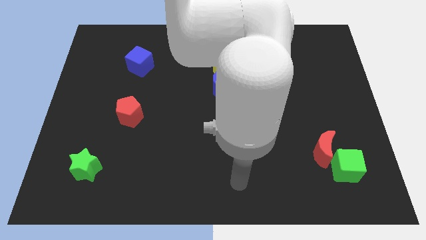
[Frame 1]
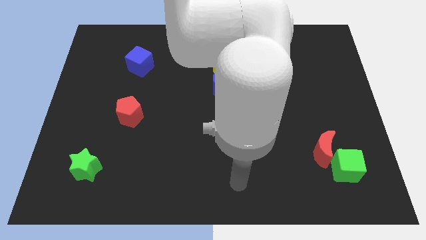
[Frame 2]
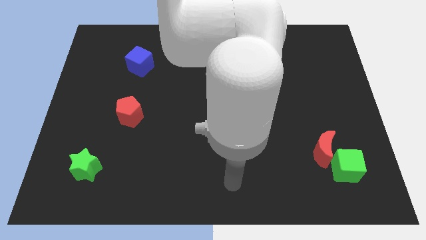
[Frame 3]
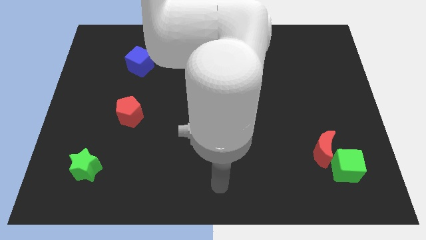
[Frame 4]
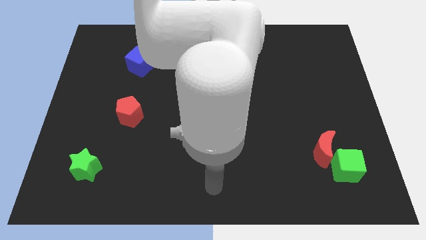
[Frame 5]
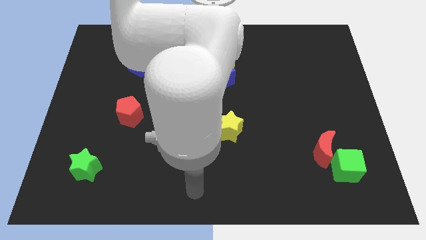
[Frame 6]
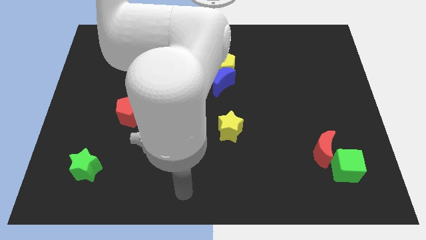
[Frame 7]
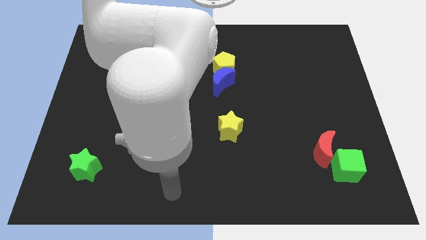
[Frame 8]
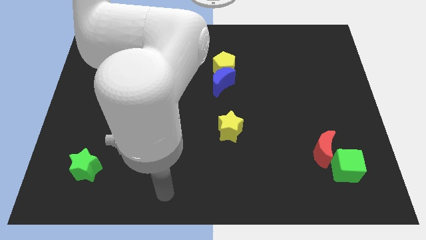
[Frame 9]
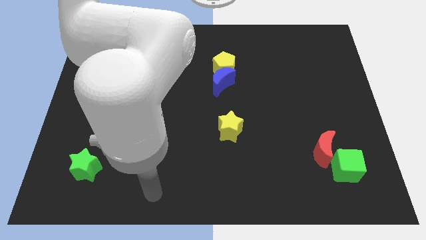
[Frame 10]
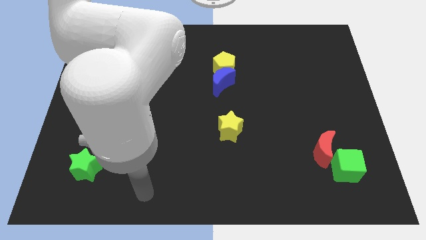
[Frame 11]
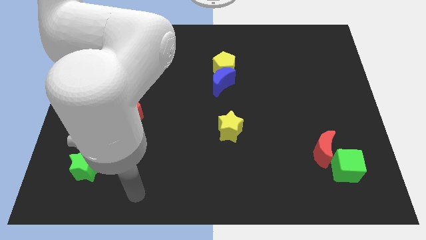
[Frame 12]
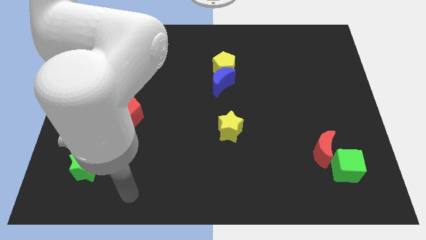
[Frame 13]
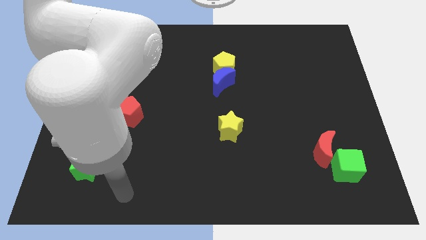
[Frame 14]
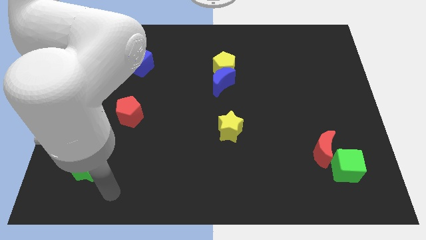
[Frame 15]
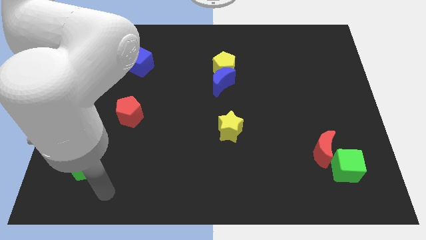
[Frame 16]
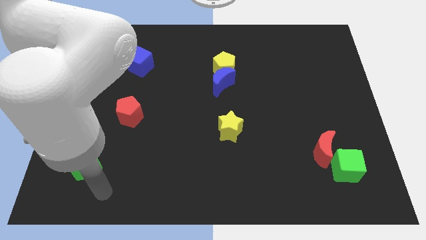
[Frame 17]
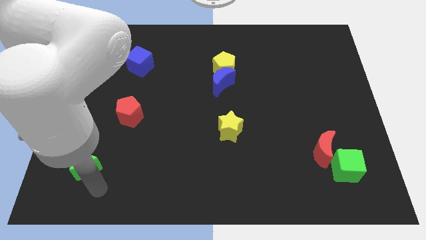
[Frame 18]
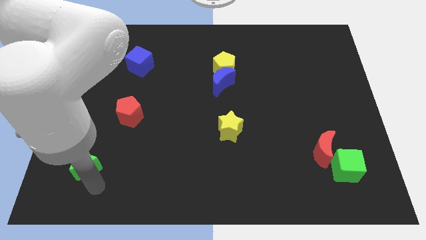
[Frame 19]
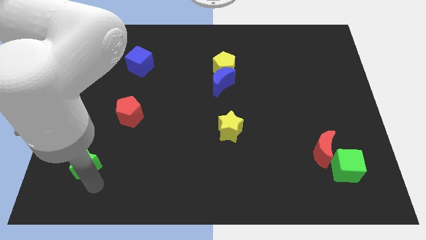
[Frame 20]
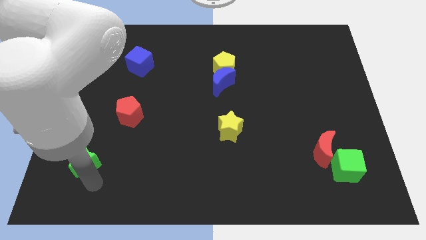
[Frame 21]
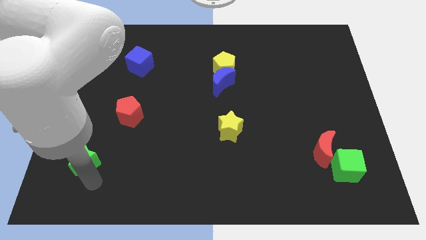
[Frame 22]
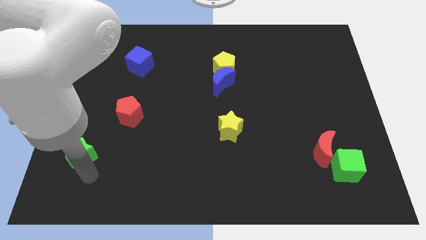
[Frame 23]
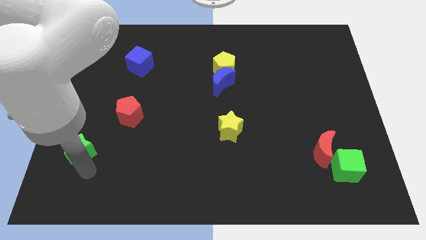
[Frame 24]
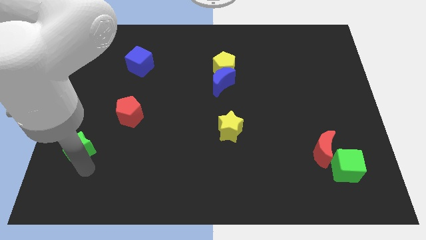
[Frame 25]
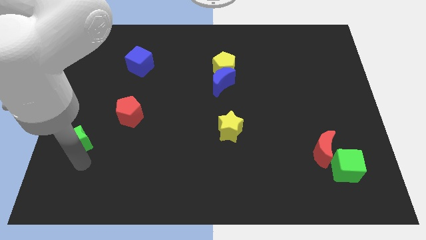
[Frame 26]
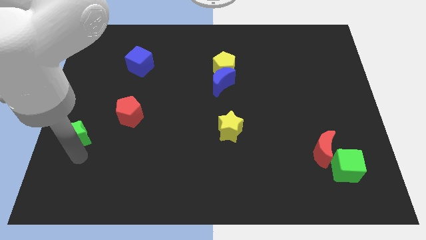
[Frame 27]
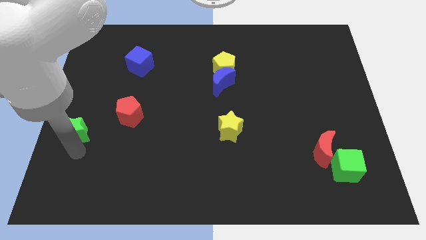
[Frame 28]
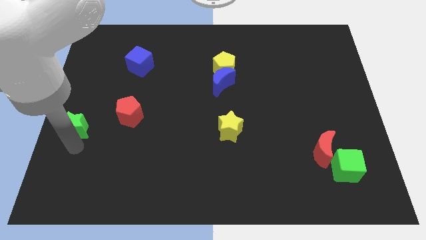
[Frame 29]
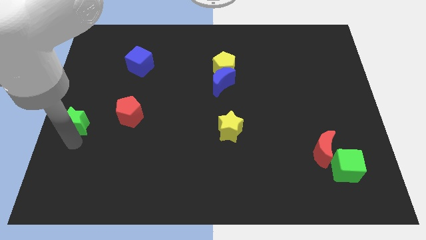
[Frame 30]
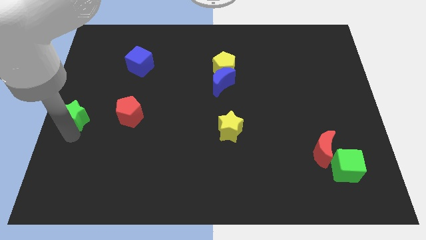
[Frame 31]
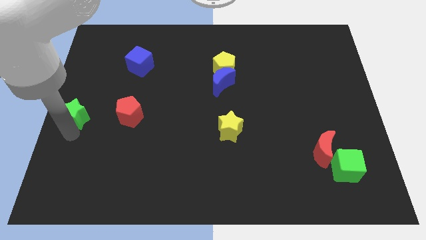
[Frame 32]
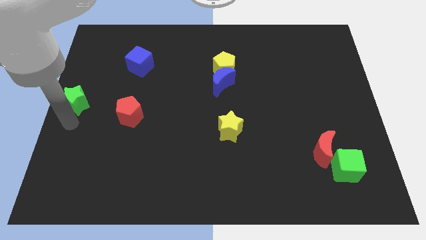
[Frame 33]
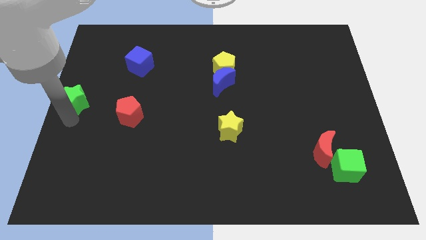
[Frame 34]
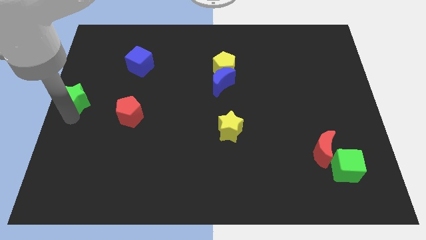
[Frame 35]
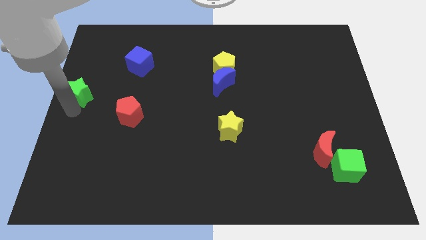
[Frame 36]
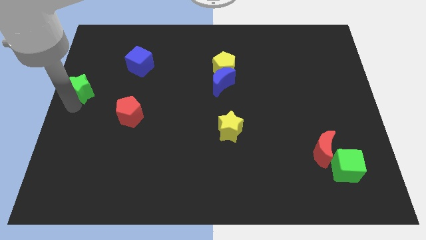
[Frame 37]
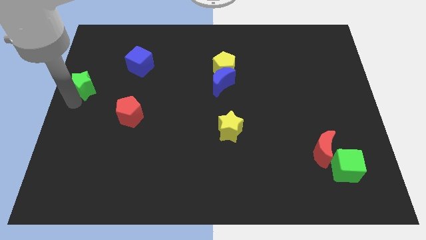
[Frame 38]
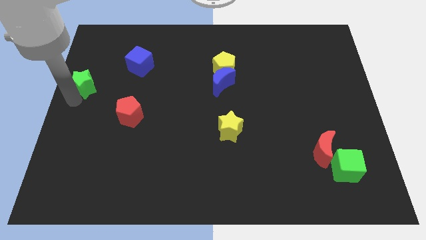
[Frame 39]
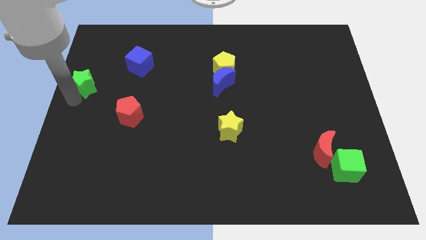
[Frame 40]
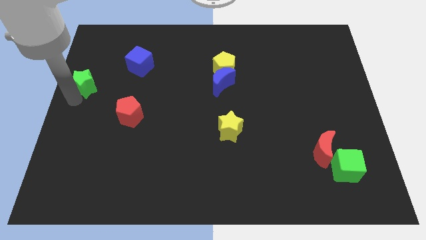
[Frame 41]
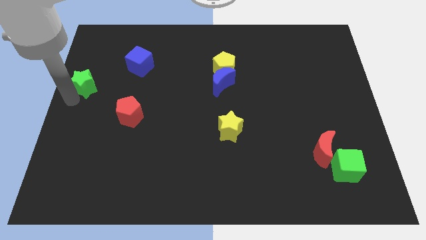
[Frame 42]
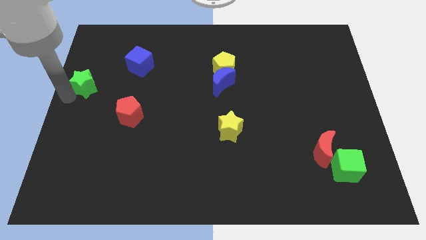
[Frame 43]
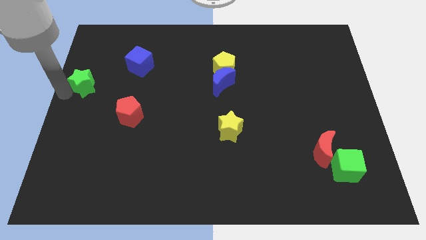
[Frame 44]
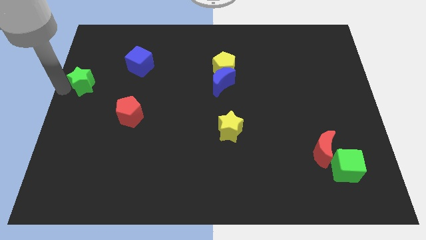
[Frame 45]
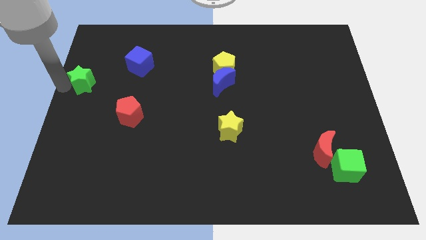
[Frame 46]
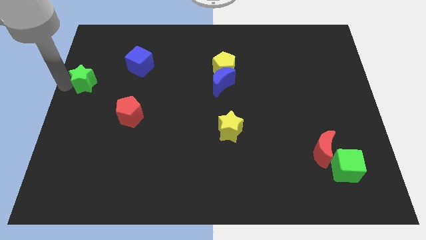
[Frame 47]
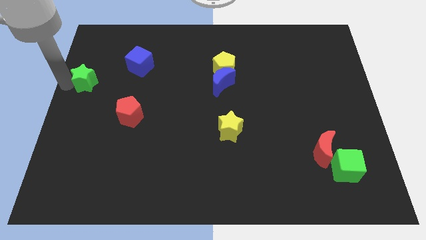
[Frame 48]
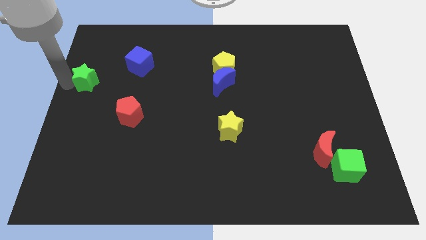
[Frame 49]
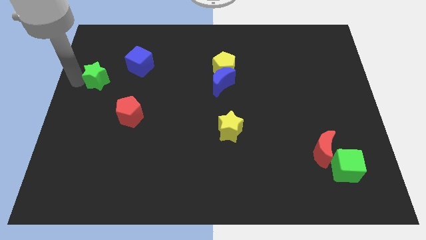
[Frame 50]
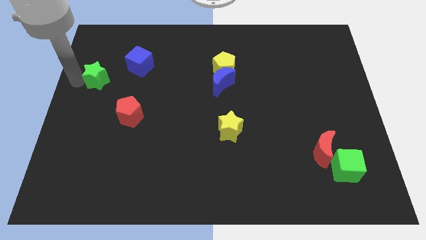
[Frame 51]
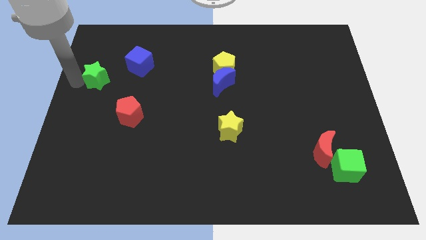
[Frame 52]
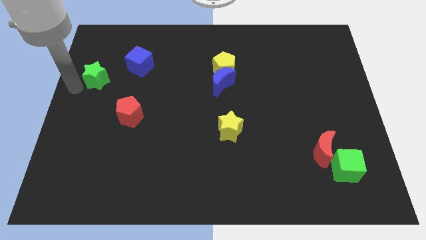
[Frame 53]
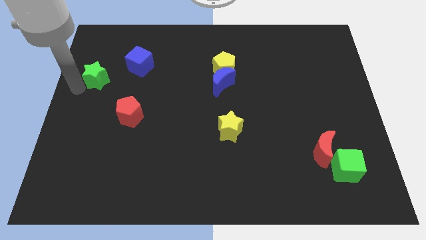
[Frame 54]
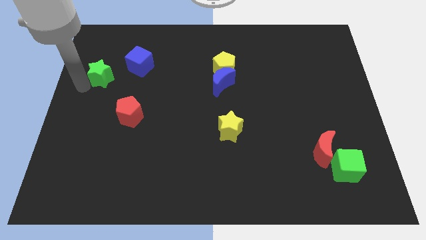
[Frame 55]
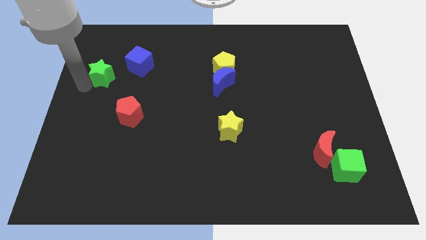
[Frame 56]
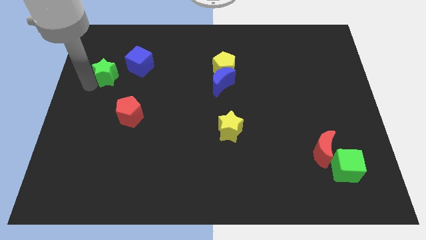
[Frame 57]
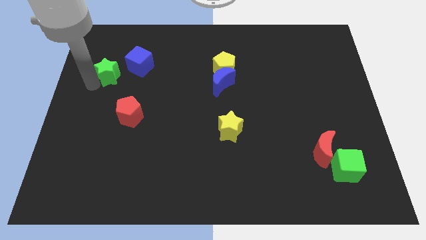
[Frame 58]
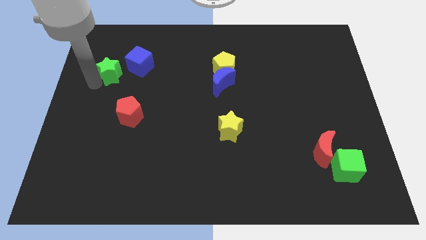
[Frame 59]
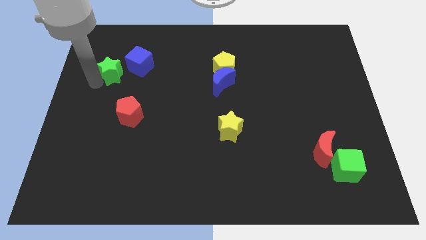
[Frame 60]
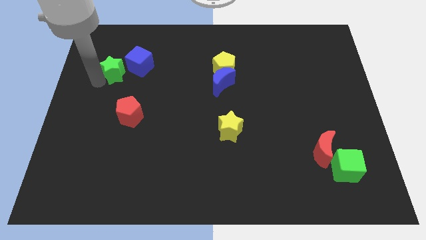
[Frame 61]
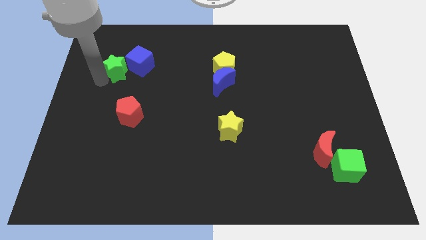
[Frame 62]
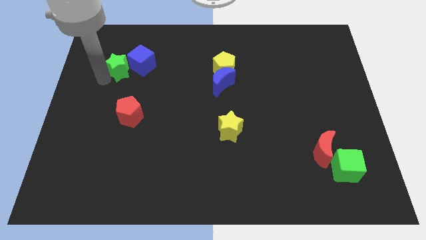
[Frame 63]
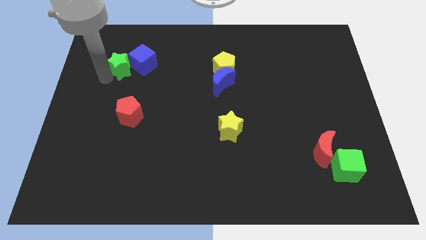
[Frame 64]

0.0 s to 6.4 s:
move the green star towards the blue cube

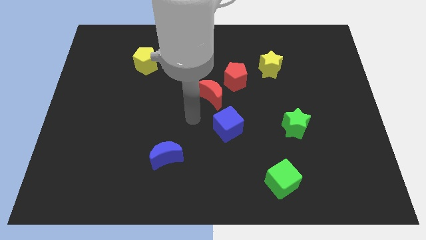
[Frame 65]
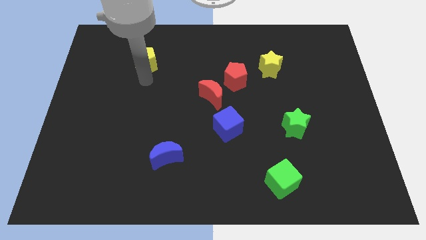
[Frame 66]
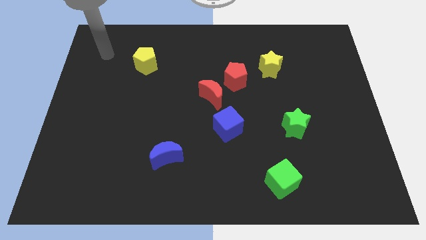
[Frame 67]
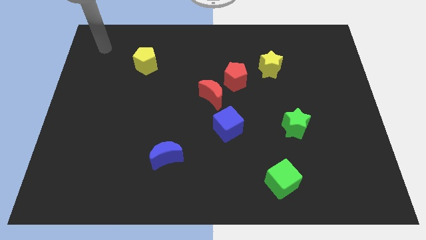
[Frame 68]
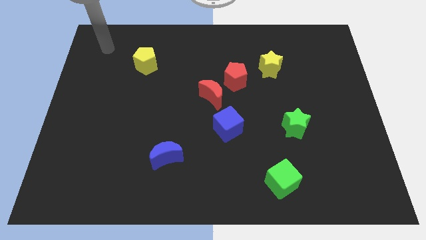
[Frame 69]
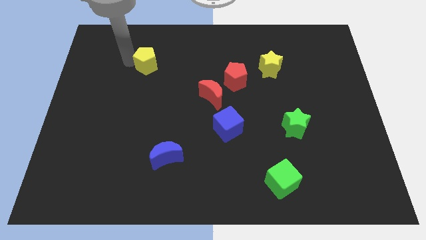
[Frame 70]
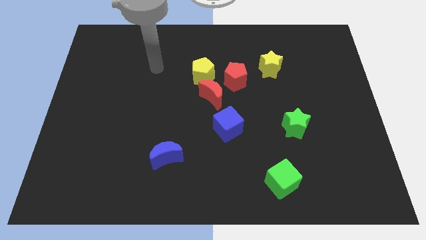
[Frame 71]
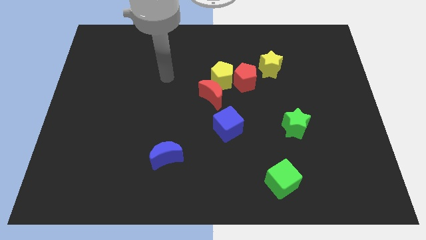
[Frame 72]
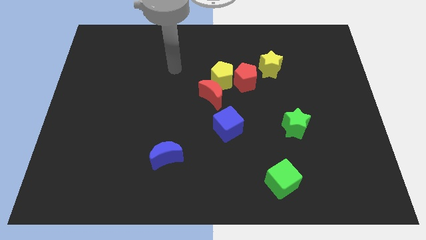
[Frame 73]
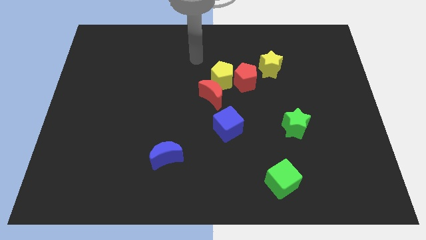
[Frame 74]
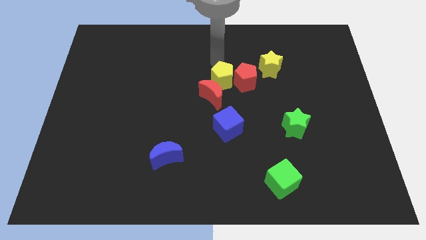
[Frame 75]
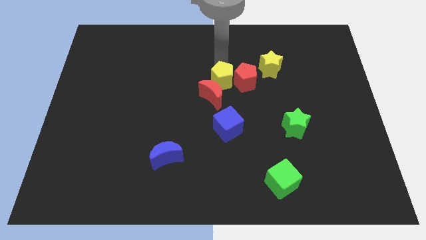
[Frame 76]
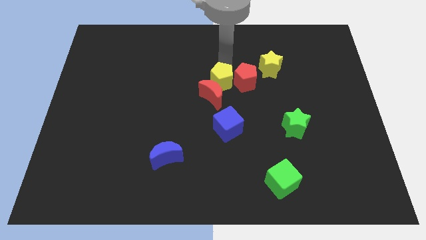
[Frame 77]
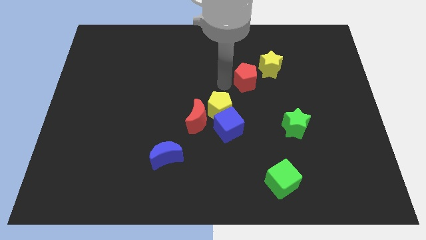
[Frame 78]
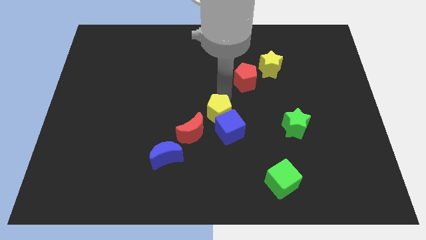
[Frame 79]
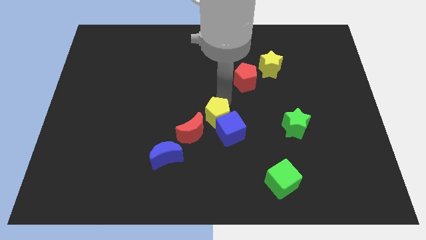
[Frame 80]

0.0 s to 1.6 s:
move the yellow pentagon to the blue cube

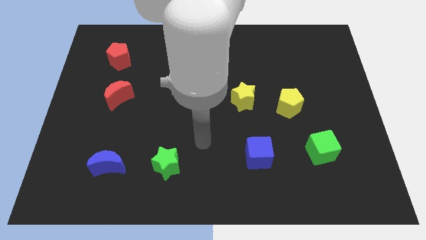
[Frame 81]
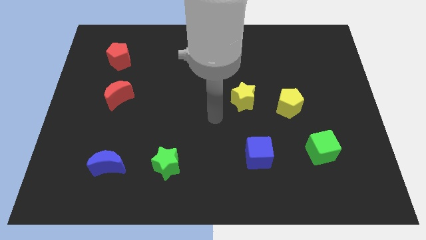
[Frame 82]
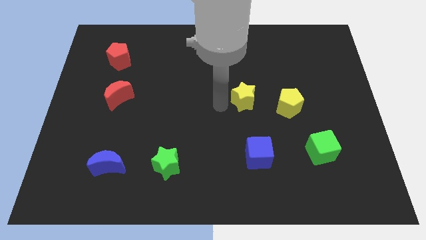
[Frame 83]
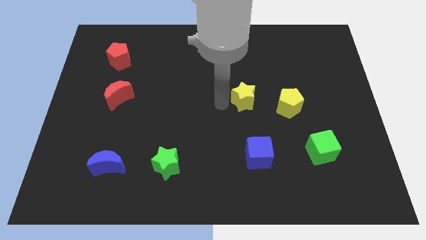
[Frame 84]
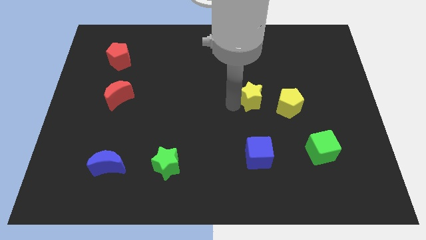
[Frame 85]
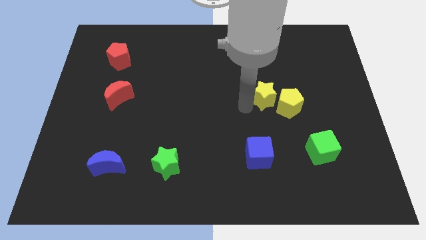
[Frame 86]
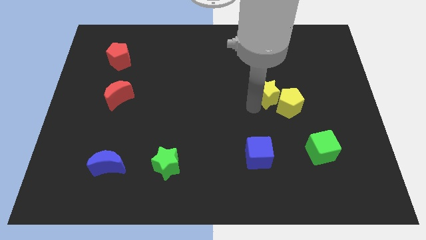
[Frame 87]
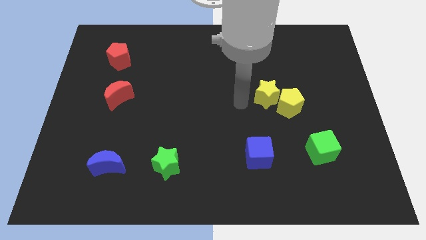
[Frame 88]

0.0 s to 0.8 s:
push the yellow star close to the yellow pentagon
